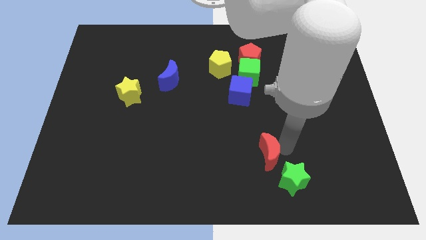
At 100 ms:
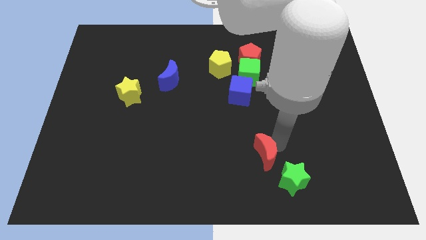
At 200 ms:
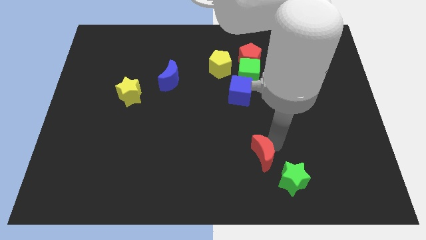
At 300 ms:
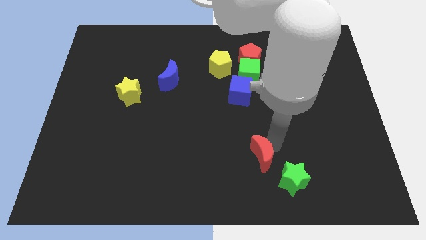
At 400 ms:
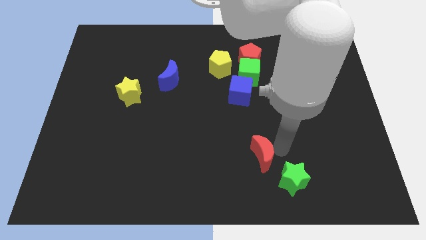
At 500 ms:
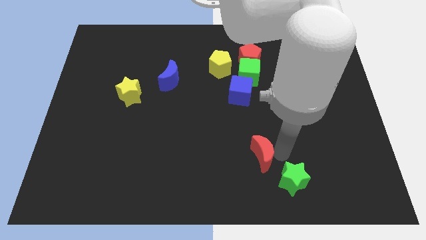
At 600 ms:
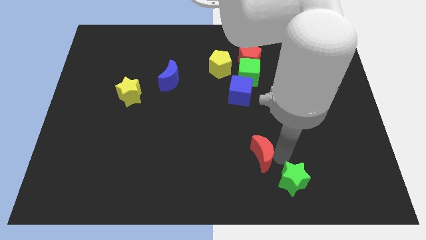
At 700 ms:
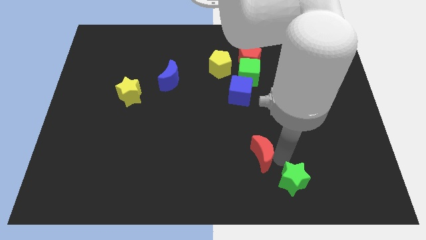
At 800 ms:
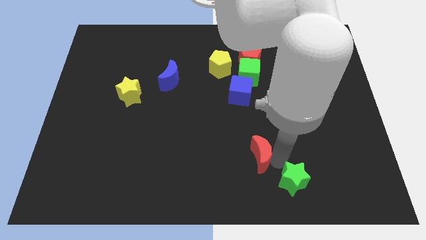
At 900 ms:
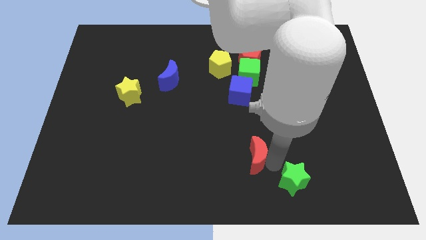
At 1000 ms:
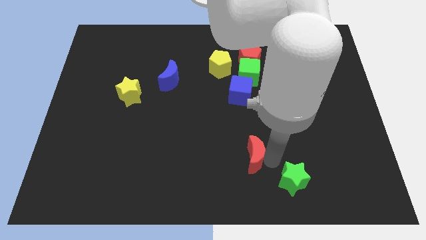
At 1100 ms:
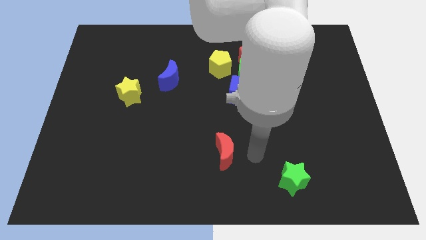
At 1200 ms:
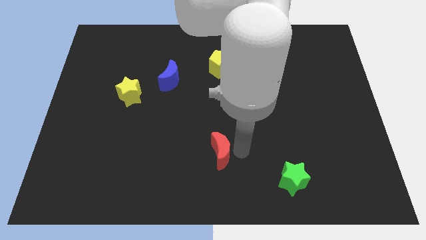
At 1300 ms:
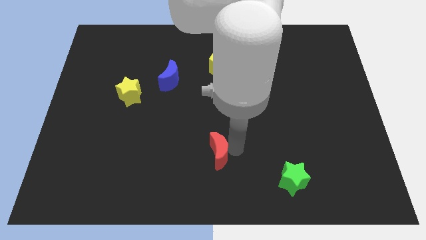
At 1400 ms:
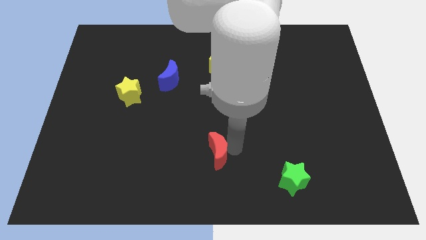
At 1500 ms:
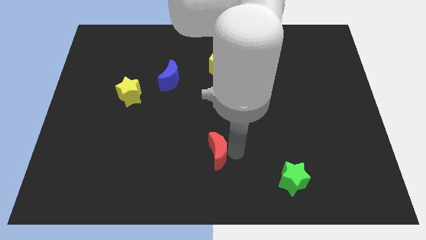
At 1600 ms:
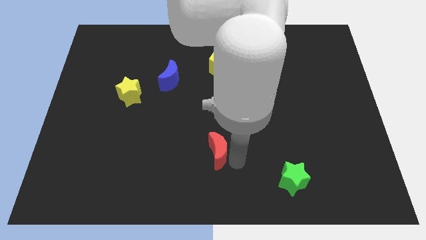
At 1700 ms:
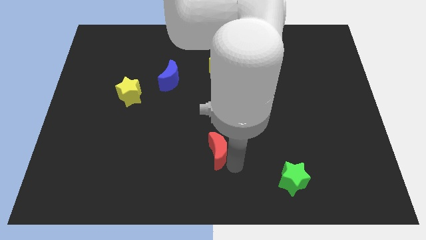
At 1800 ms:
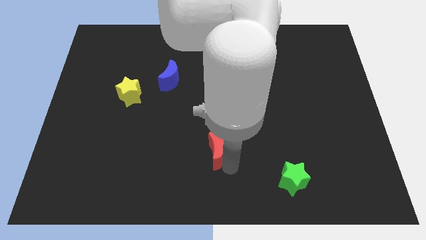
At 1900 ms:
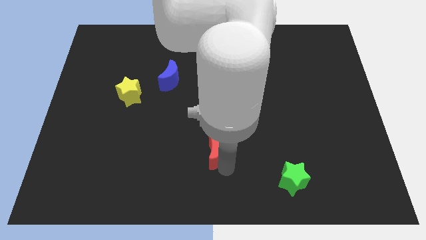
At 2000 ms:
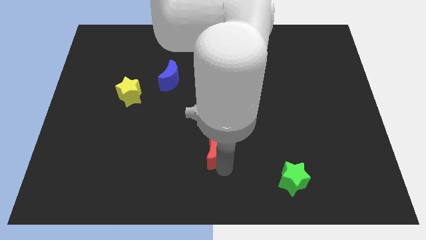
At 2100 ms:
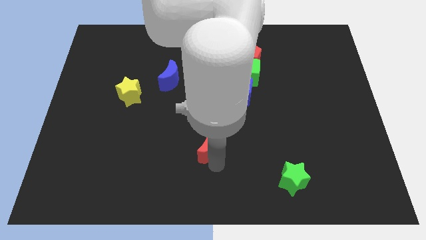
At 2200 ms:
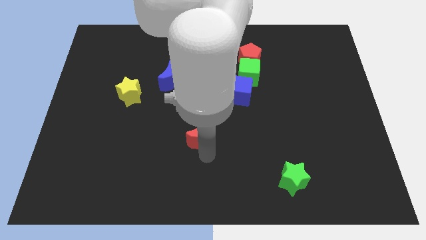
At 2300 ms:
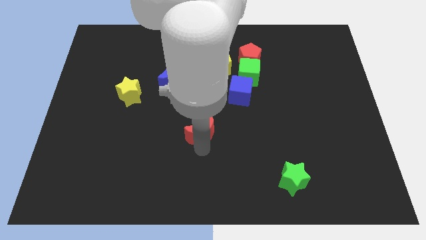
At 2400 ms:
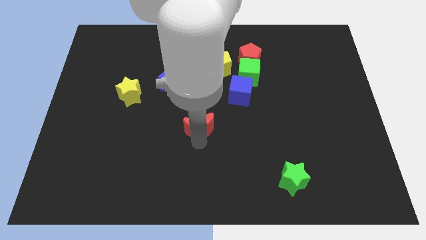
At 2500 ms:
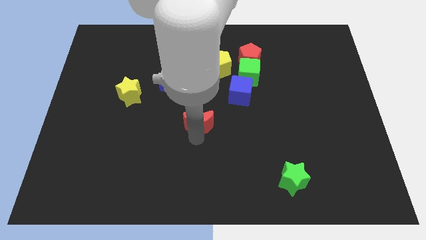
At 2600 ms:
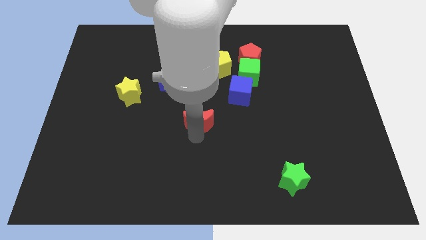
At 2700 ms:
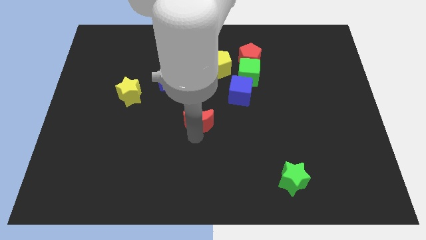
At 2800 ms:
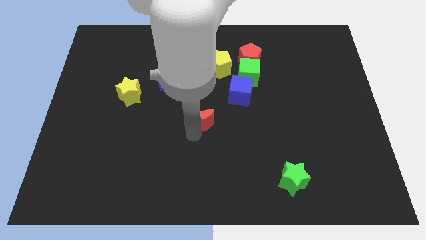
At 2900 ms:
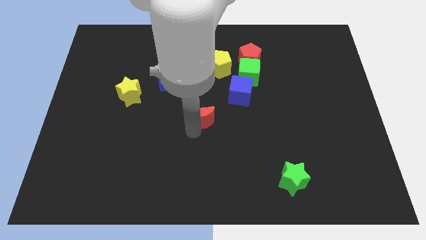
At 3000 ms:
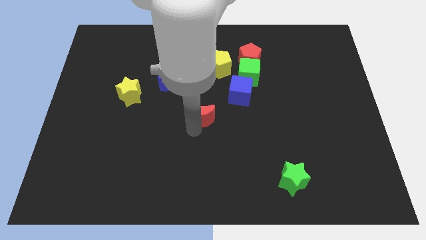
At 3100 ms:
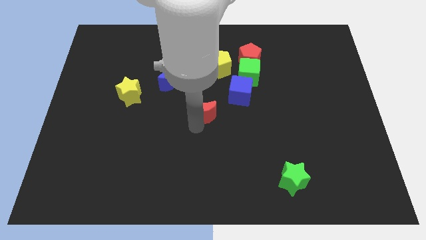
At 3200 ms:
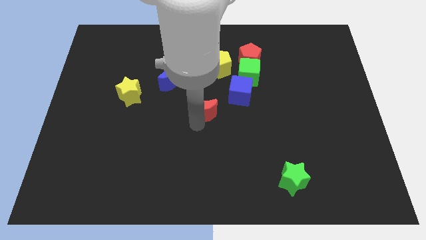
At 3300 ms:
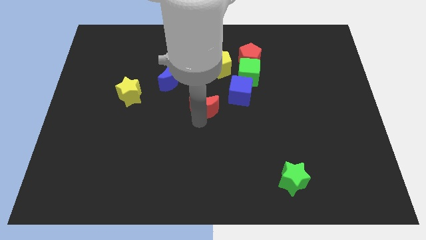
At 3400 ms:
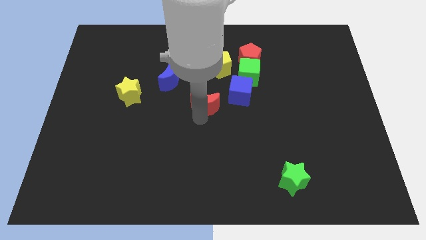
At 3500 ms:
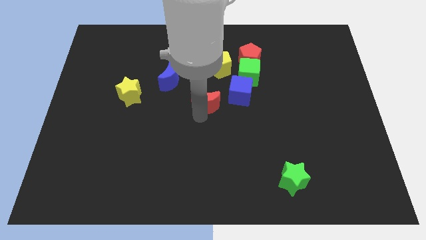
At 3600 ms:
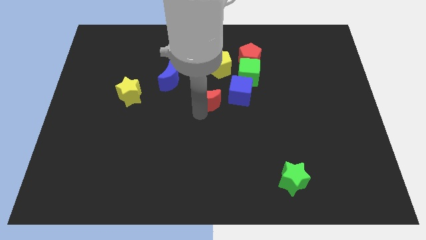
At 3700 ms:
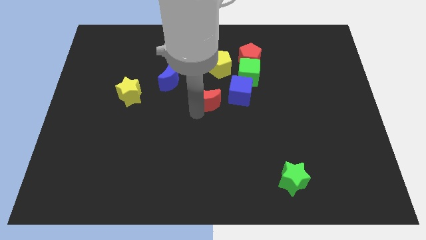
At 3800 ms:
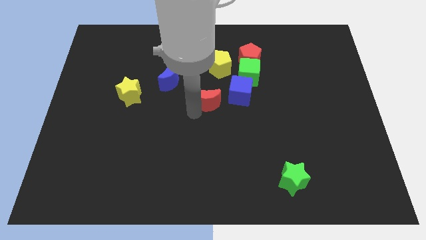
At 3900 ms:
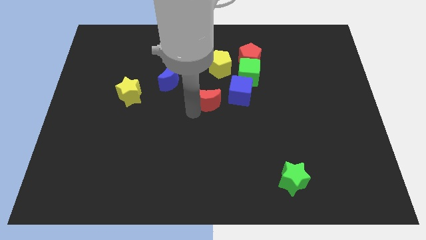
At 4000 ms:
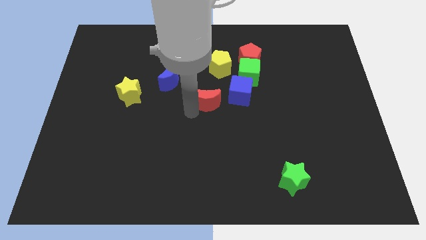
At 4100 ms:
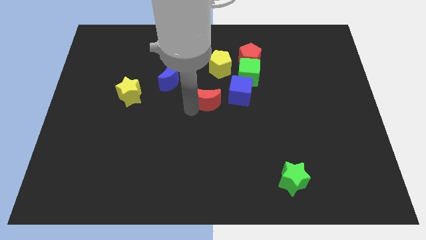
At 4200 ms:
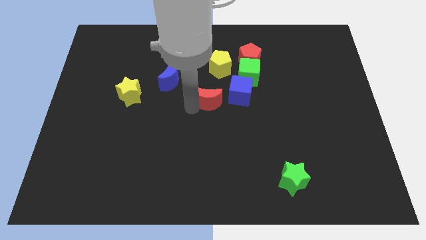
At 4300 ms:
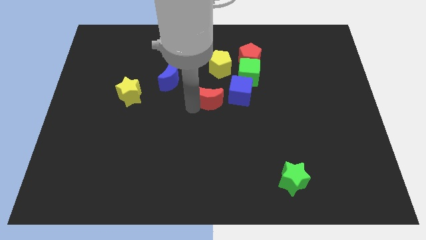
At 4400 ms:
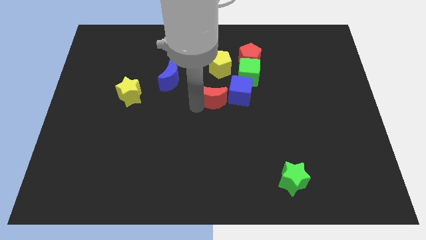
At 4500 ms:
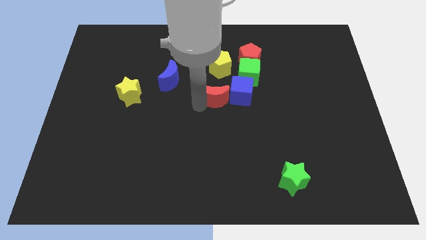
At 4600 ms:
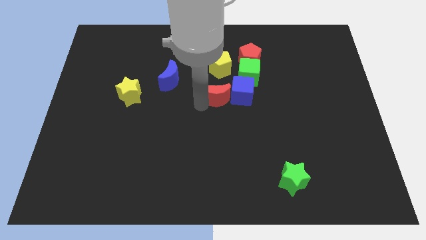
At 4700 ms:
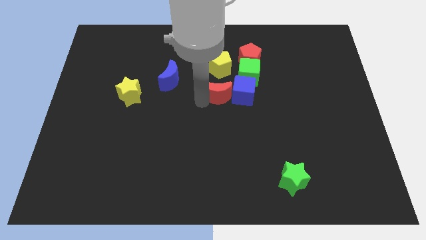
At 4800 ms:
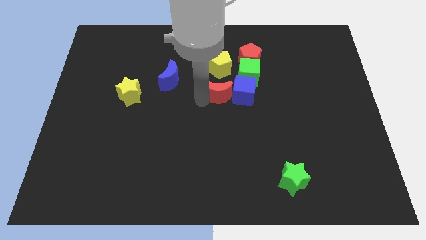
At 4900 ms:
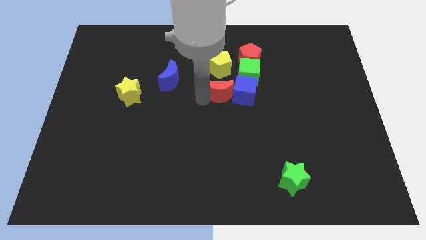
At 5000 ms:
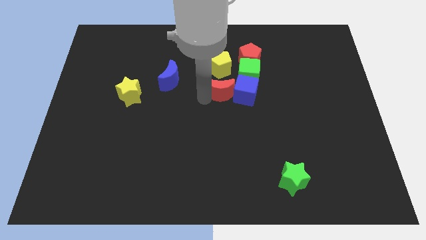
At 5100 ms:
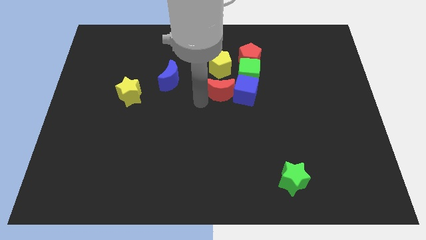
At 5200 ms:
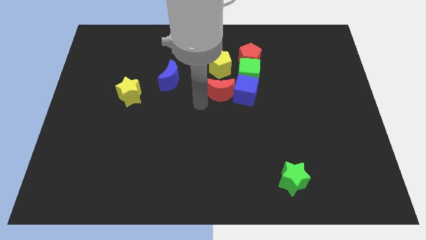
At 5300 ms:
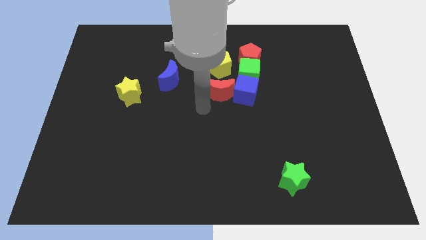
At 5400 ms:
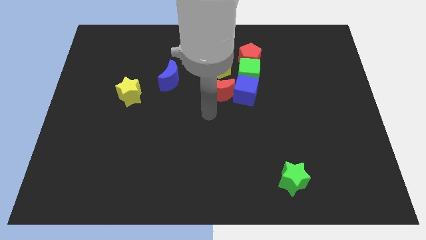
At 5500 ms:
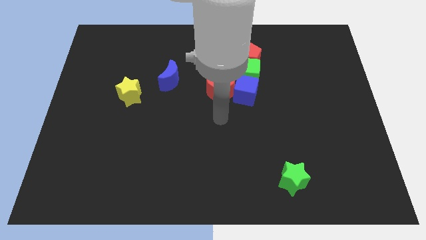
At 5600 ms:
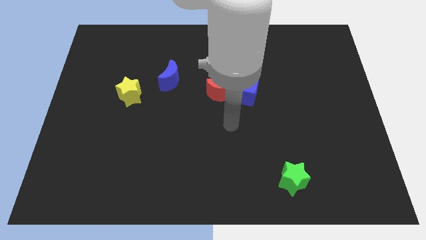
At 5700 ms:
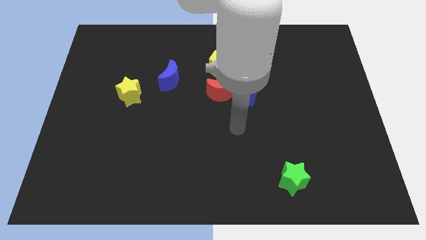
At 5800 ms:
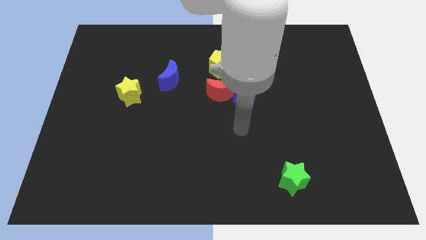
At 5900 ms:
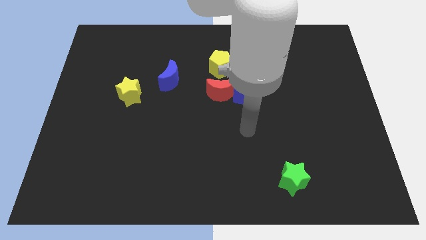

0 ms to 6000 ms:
place the red moon left to the blue cube

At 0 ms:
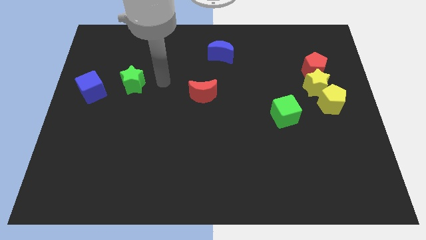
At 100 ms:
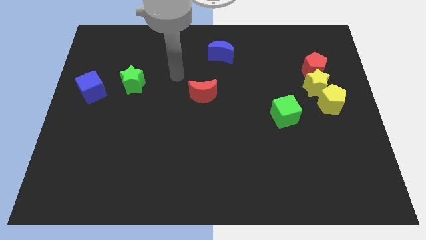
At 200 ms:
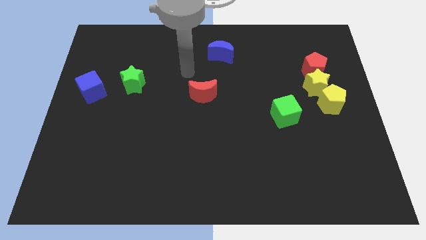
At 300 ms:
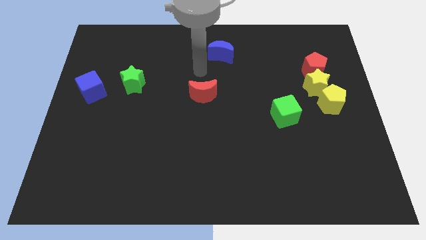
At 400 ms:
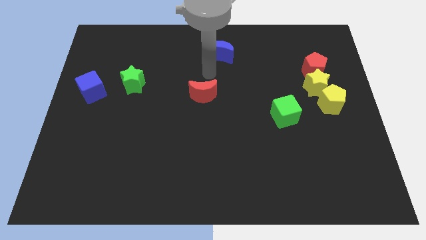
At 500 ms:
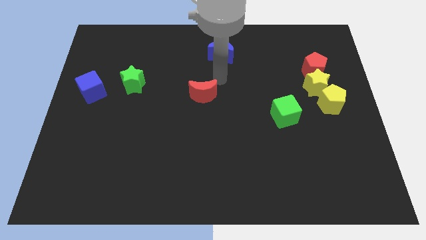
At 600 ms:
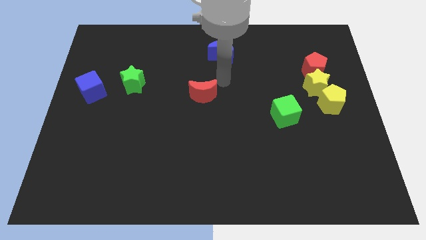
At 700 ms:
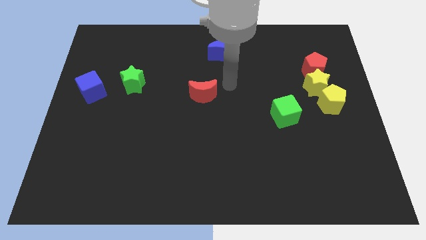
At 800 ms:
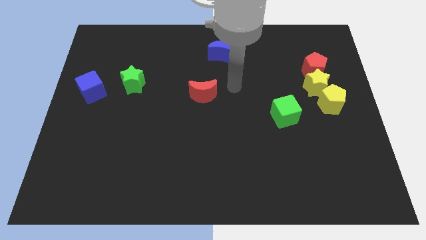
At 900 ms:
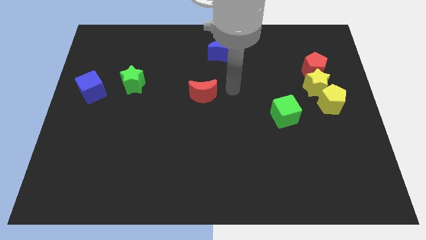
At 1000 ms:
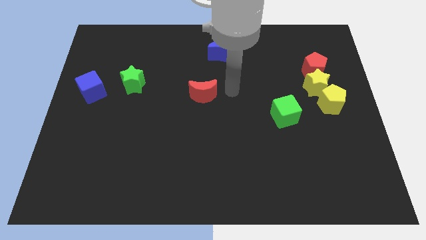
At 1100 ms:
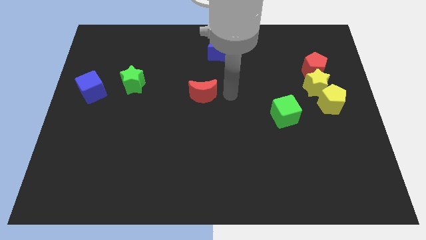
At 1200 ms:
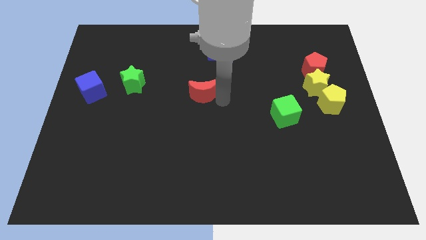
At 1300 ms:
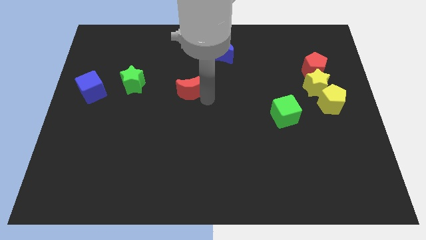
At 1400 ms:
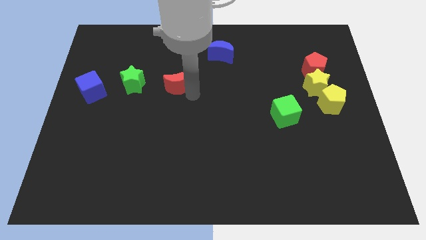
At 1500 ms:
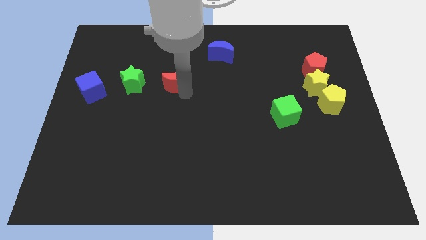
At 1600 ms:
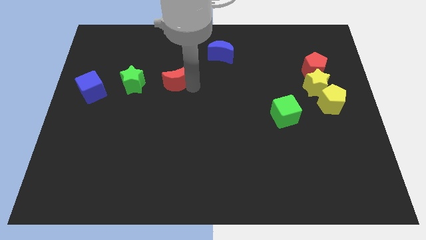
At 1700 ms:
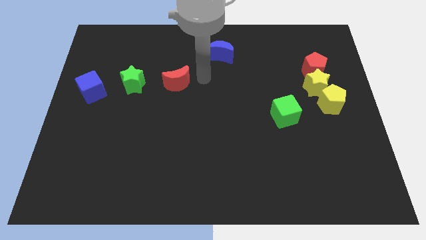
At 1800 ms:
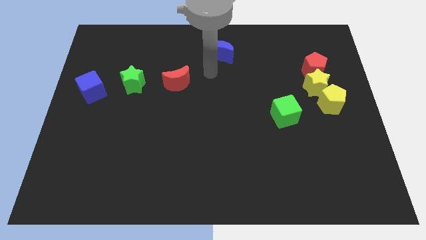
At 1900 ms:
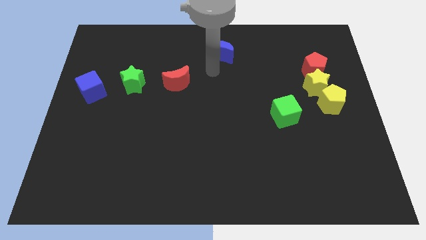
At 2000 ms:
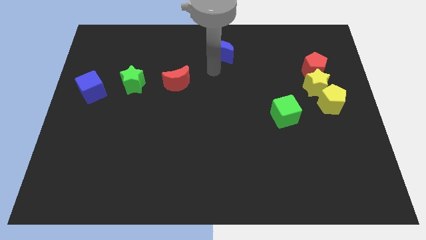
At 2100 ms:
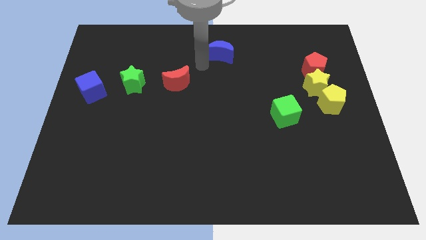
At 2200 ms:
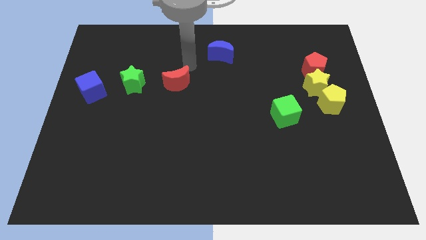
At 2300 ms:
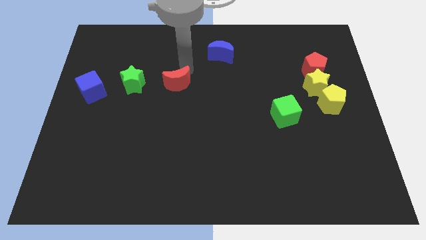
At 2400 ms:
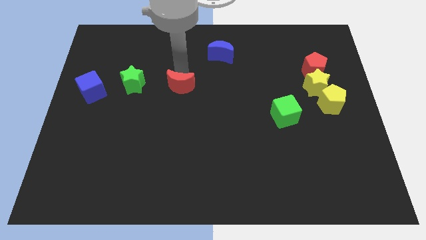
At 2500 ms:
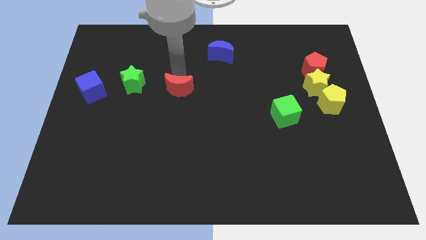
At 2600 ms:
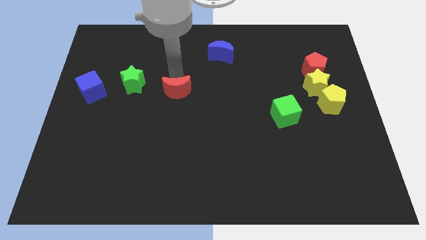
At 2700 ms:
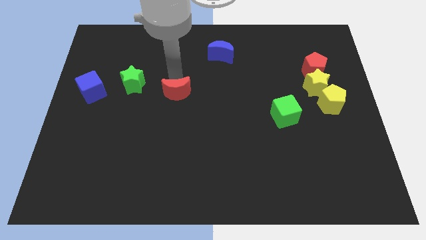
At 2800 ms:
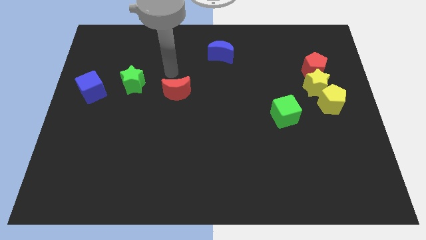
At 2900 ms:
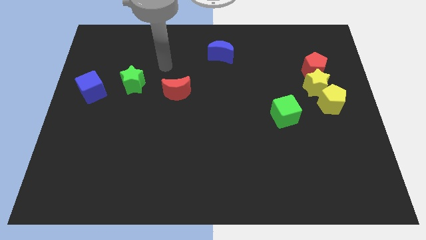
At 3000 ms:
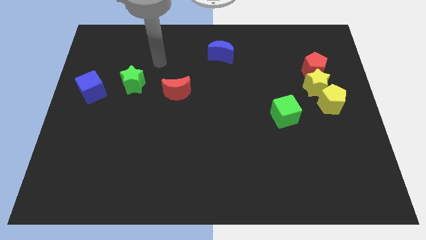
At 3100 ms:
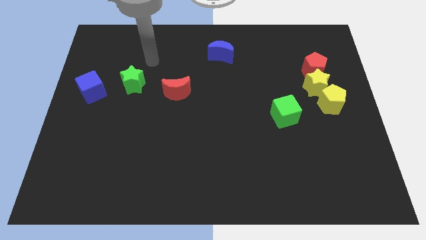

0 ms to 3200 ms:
push the red moon slightly to the center
